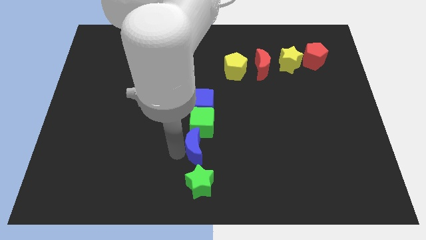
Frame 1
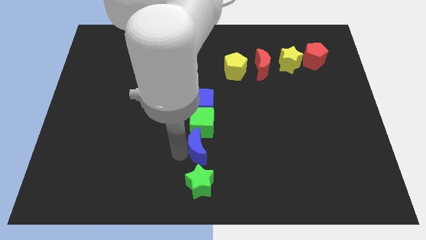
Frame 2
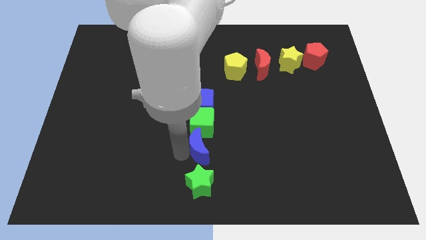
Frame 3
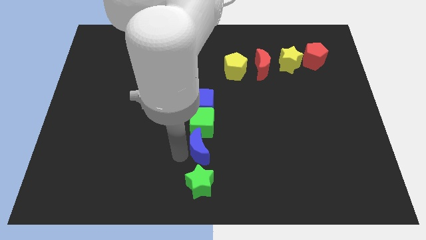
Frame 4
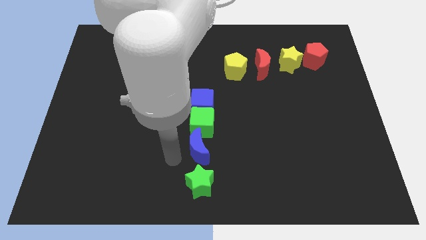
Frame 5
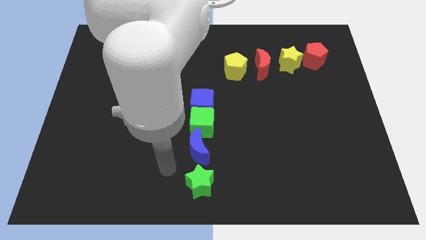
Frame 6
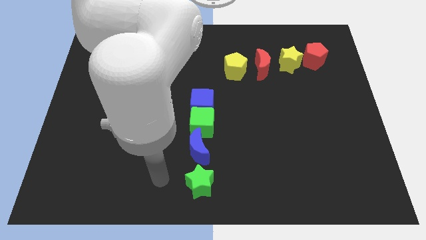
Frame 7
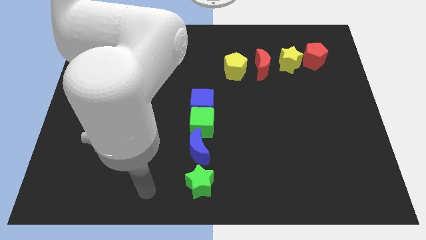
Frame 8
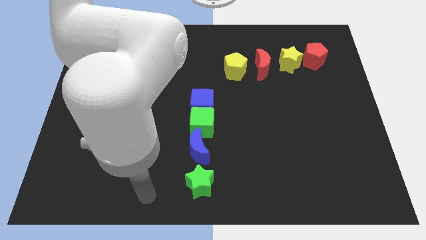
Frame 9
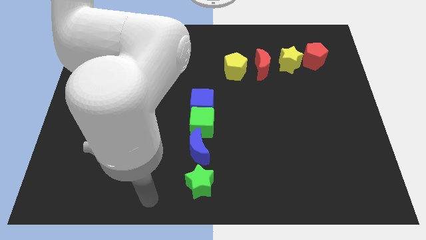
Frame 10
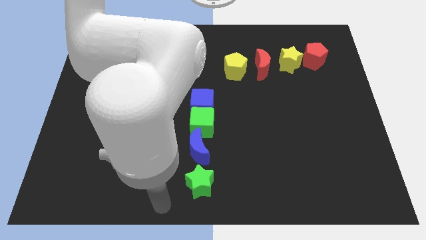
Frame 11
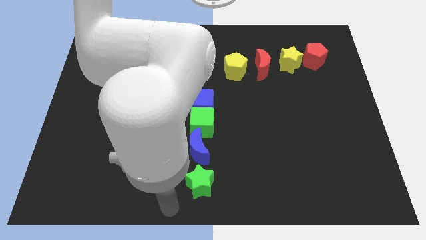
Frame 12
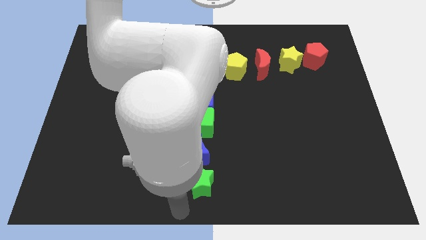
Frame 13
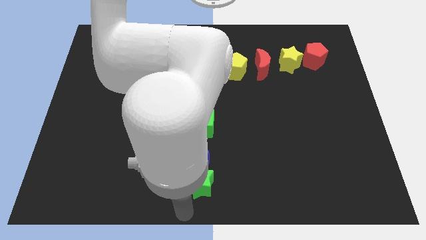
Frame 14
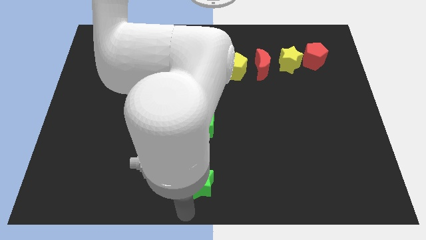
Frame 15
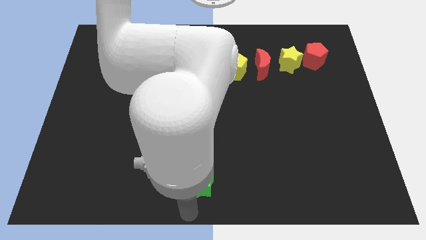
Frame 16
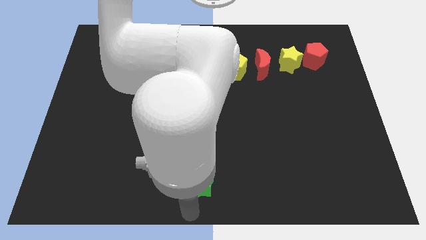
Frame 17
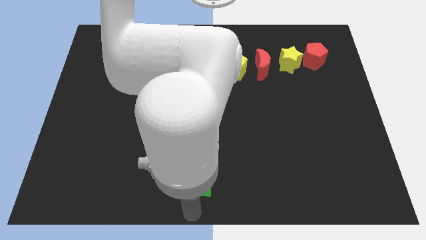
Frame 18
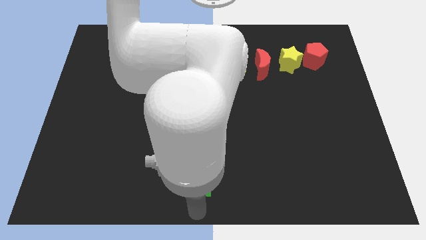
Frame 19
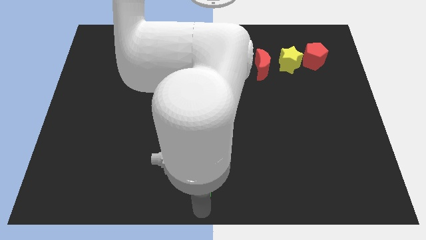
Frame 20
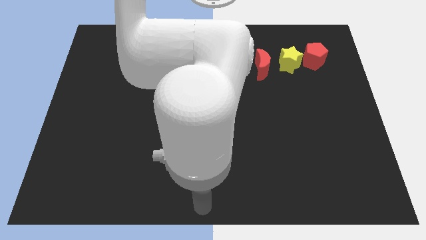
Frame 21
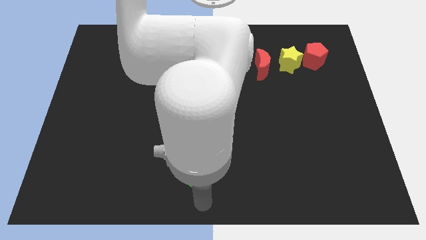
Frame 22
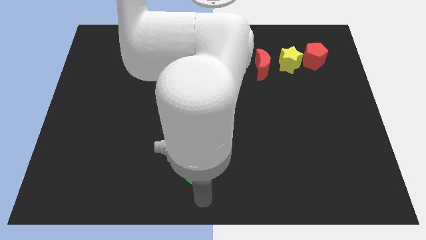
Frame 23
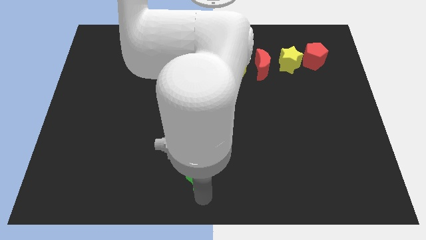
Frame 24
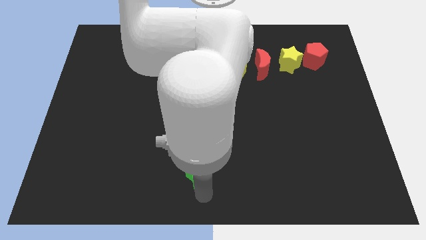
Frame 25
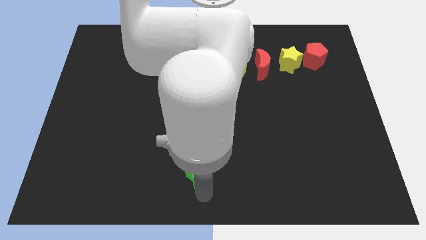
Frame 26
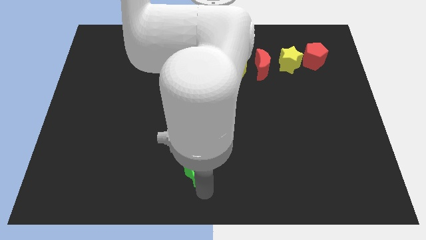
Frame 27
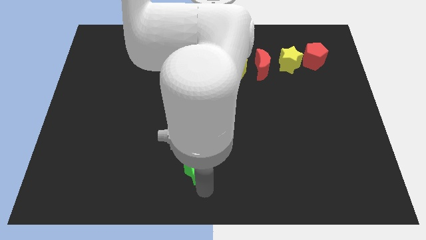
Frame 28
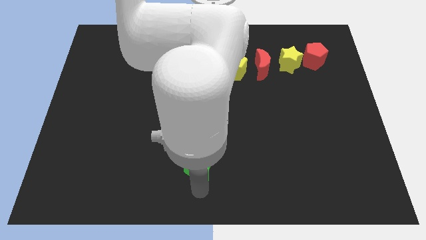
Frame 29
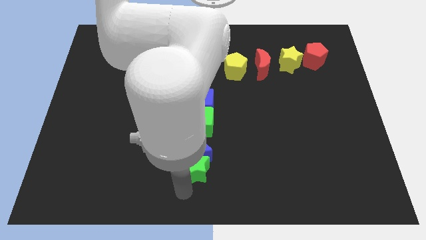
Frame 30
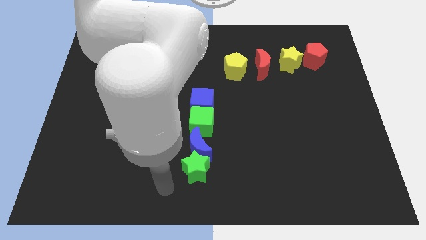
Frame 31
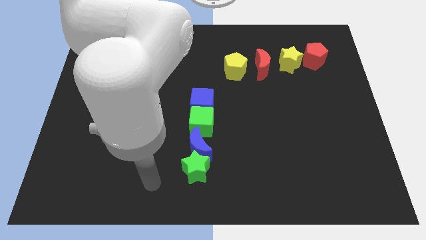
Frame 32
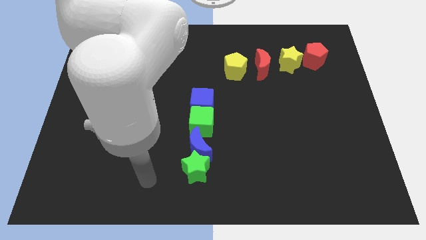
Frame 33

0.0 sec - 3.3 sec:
push the green star into the blue moon

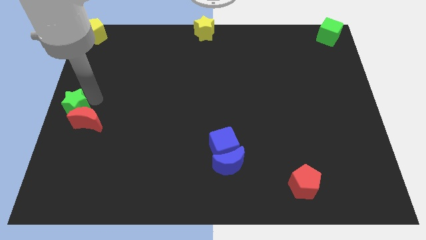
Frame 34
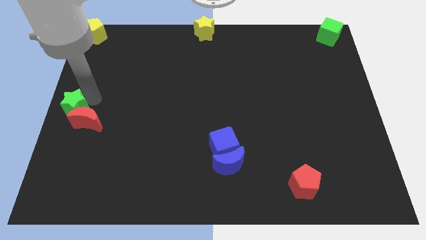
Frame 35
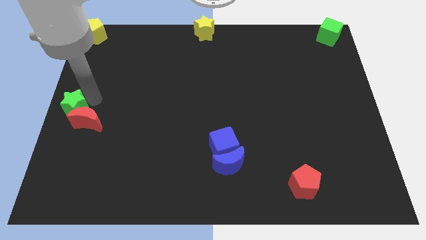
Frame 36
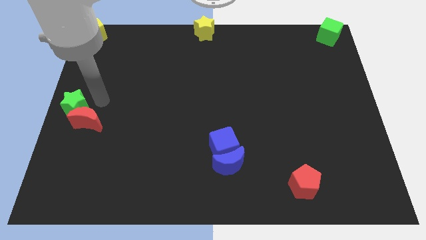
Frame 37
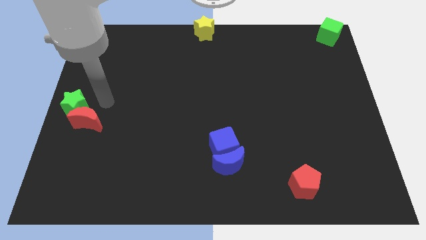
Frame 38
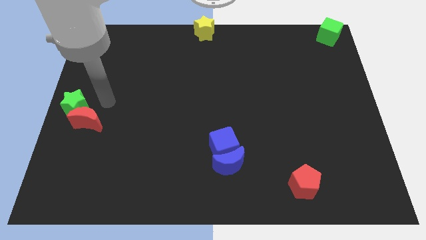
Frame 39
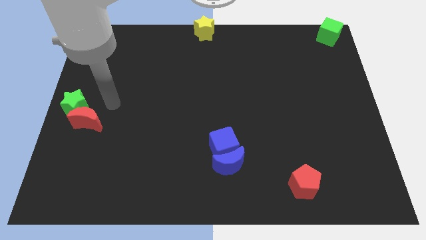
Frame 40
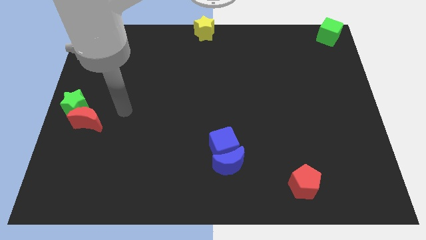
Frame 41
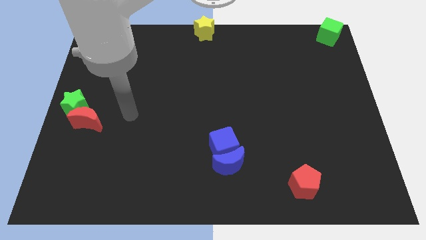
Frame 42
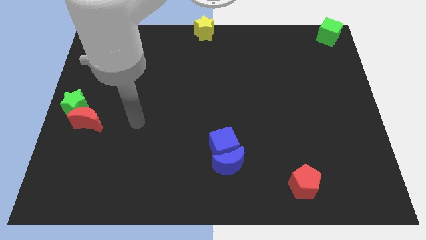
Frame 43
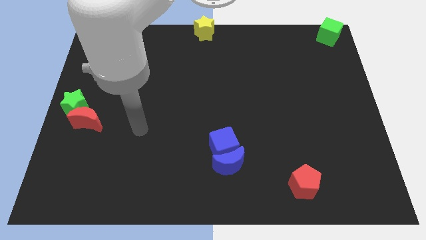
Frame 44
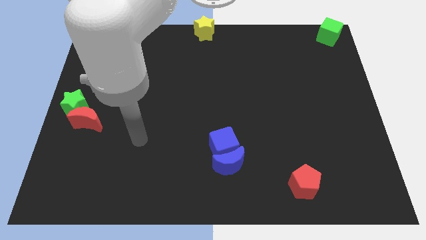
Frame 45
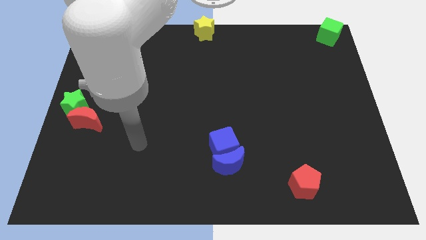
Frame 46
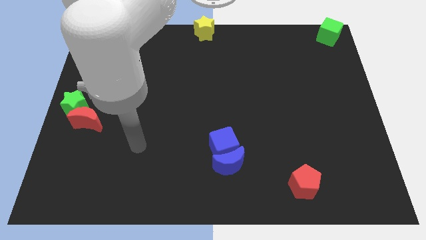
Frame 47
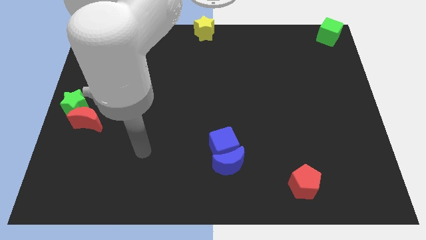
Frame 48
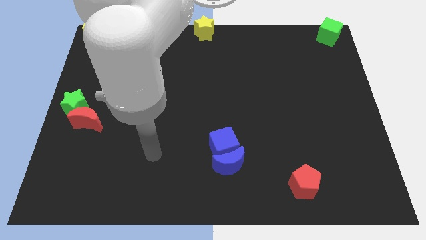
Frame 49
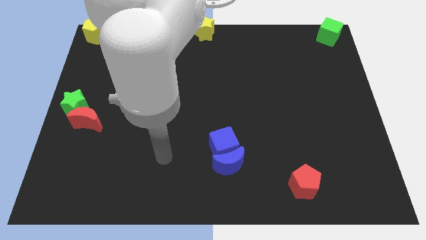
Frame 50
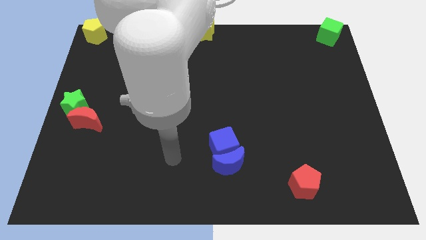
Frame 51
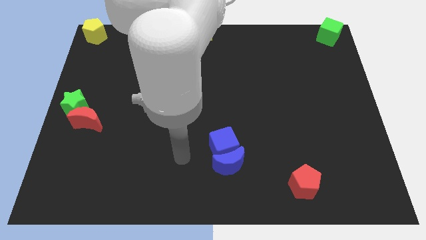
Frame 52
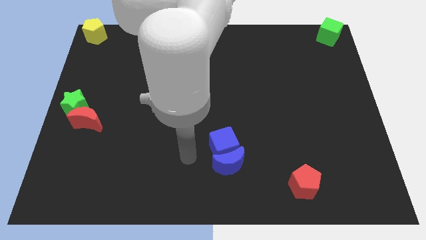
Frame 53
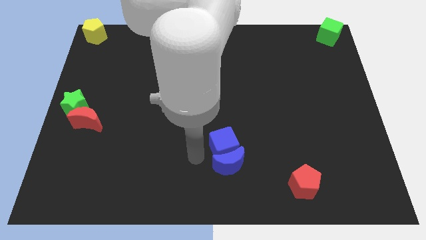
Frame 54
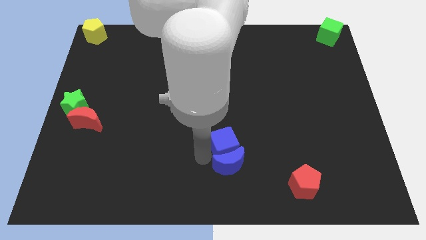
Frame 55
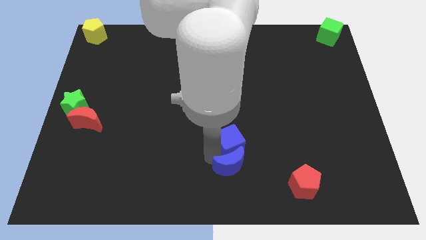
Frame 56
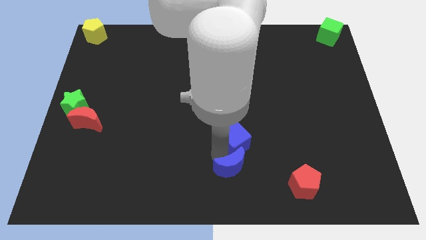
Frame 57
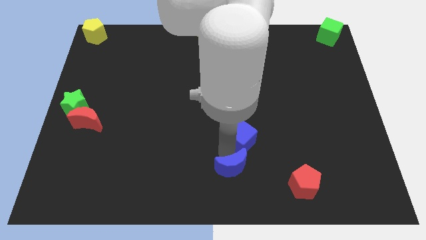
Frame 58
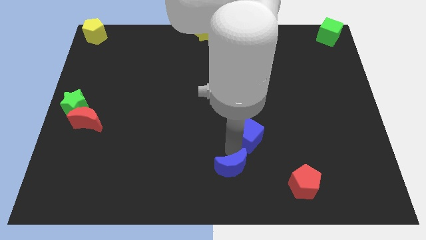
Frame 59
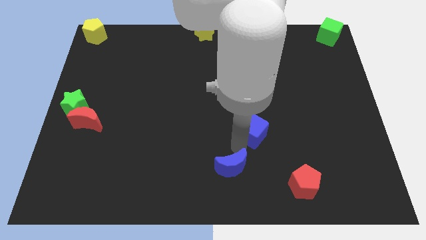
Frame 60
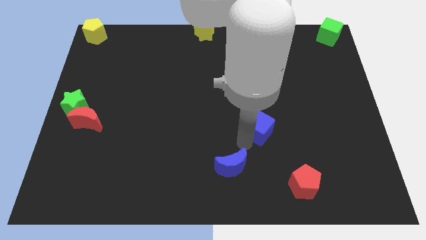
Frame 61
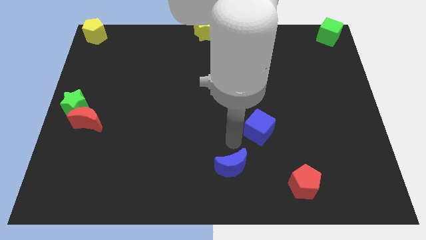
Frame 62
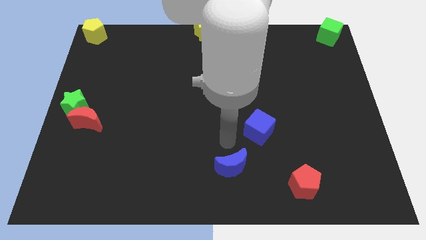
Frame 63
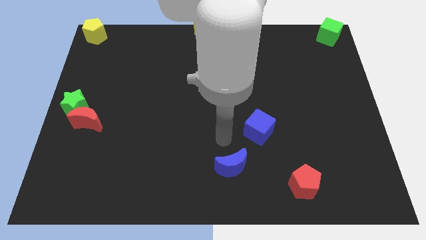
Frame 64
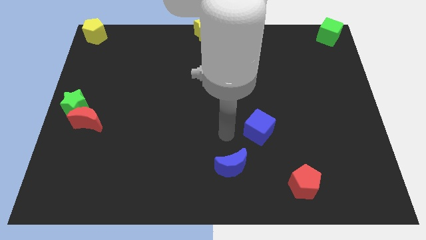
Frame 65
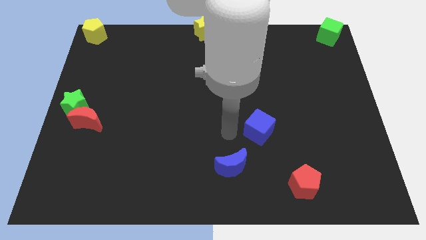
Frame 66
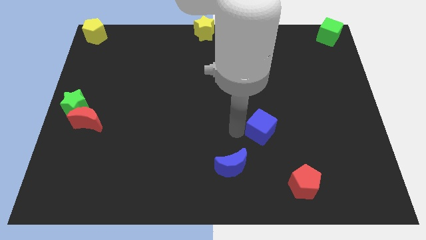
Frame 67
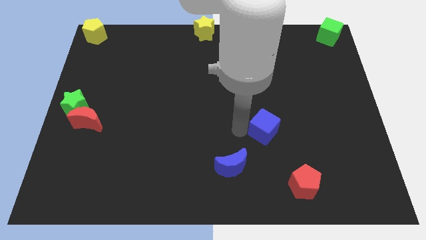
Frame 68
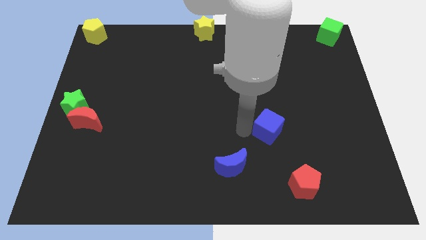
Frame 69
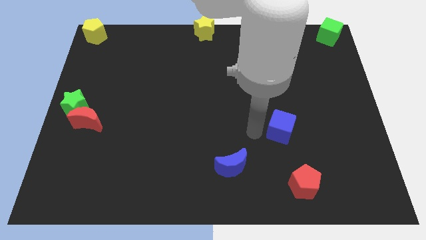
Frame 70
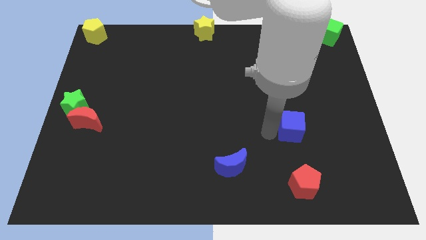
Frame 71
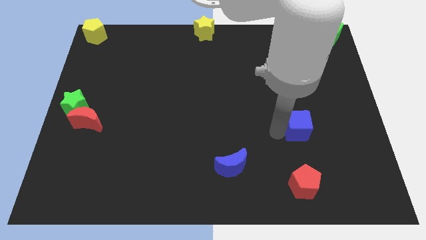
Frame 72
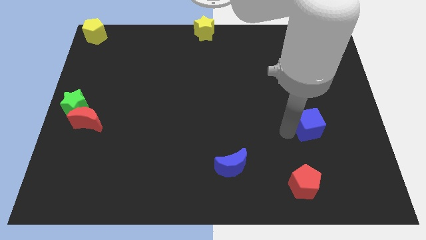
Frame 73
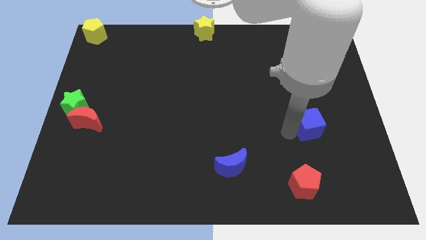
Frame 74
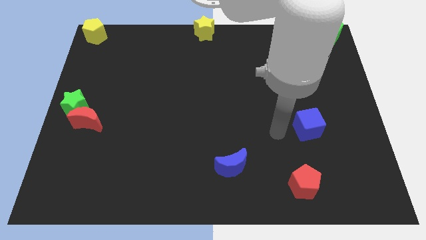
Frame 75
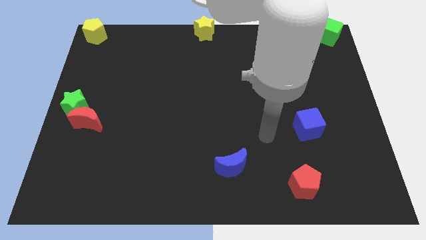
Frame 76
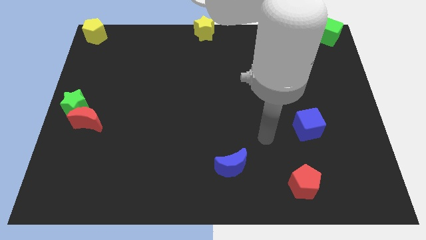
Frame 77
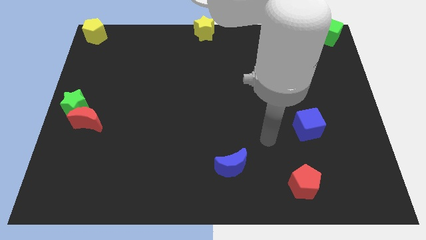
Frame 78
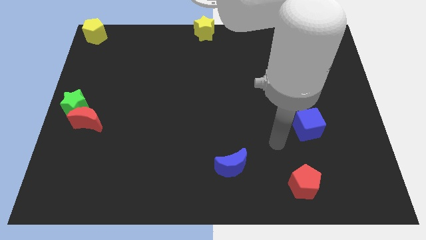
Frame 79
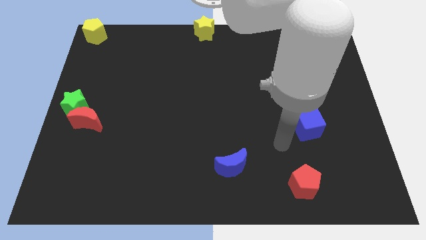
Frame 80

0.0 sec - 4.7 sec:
move blue cube away from the blue moon

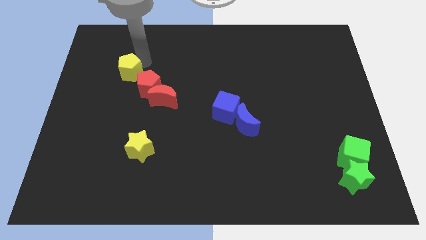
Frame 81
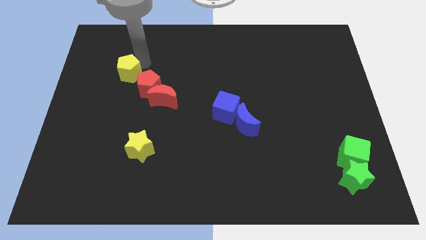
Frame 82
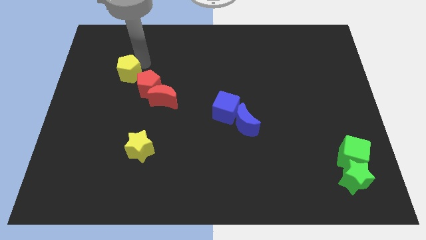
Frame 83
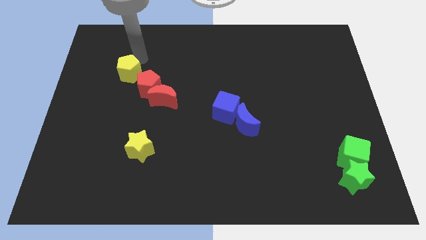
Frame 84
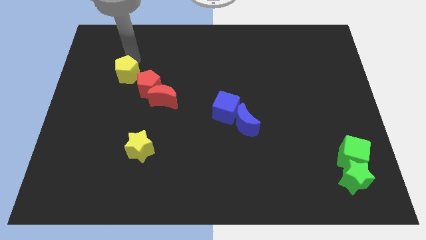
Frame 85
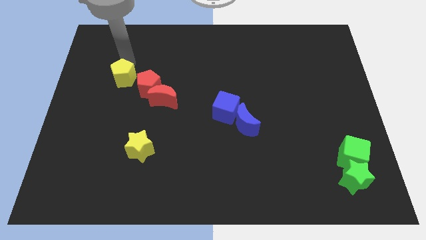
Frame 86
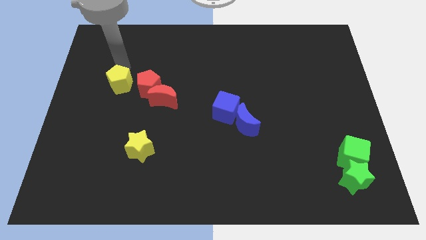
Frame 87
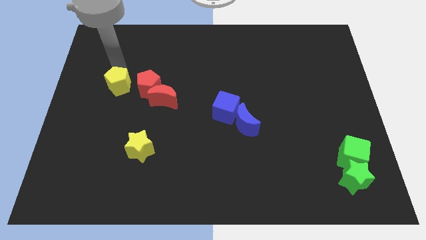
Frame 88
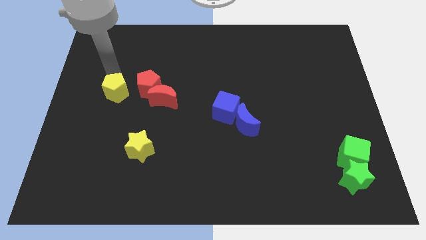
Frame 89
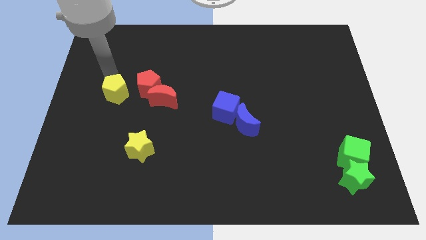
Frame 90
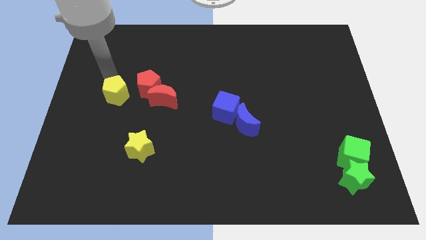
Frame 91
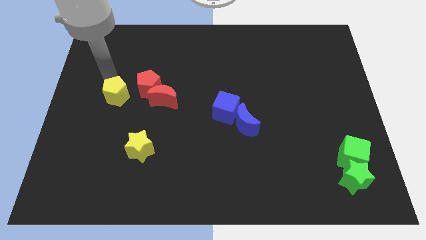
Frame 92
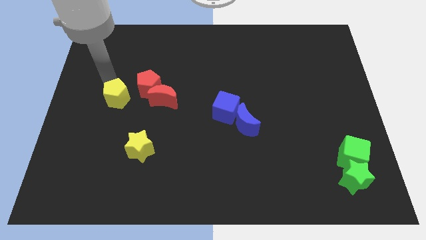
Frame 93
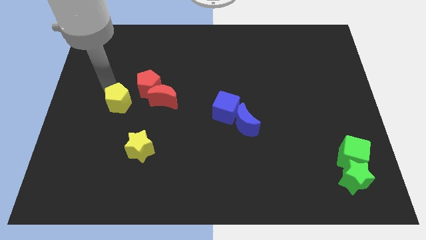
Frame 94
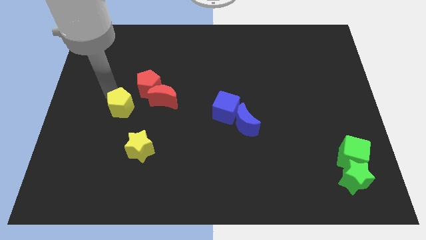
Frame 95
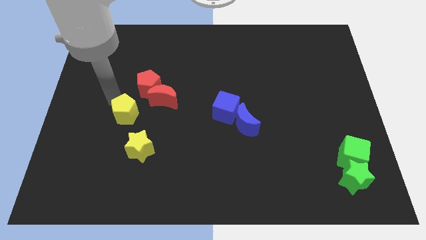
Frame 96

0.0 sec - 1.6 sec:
place the yellow pentagon diagonally above yellow star
